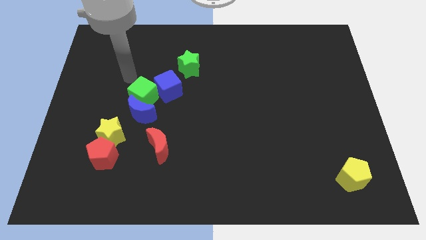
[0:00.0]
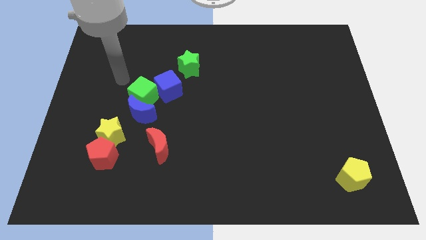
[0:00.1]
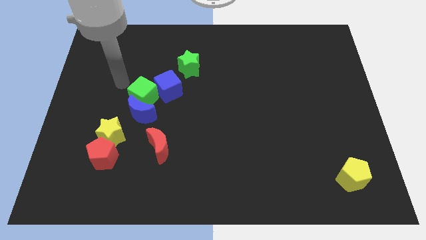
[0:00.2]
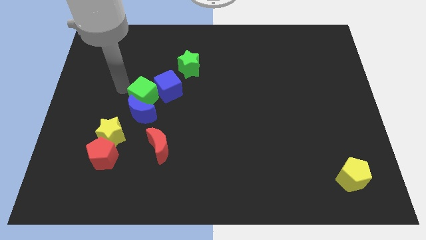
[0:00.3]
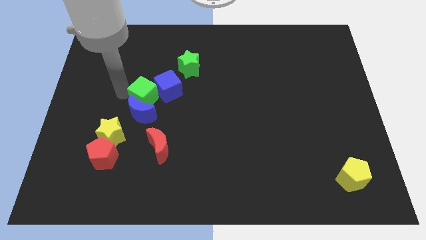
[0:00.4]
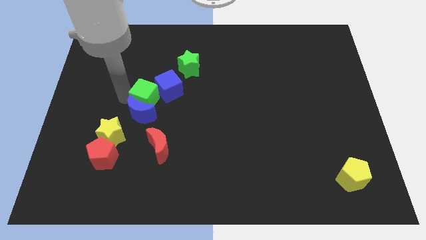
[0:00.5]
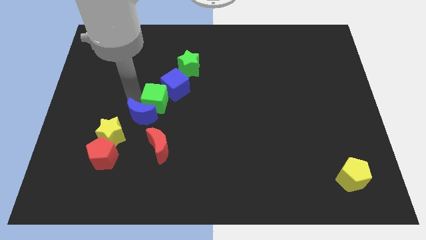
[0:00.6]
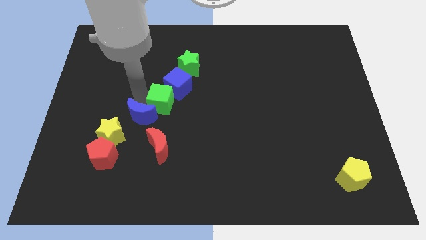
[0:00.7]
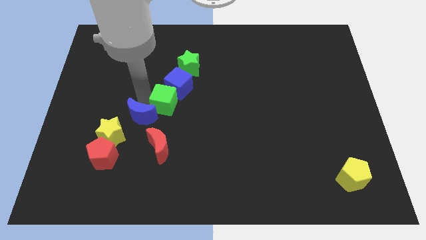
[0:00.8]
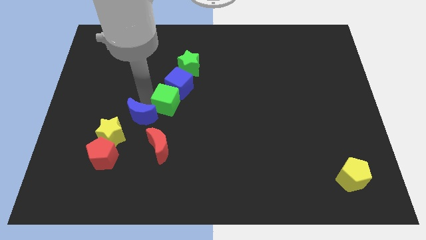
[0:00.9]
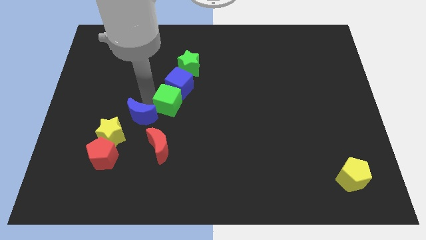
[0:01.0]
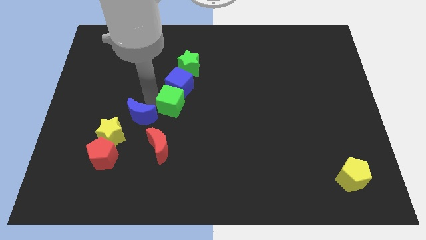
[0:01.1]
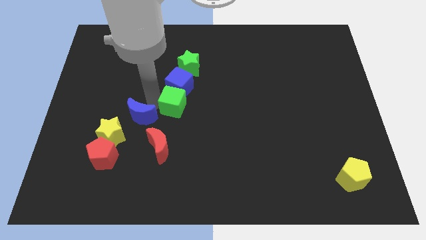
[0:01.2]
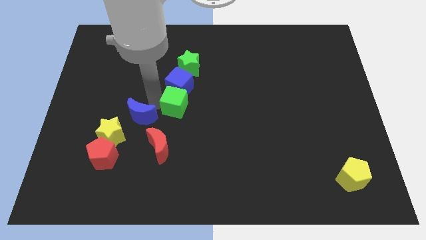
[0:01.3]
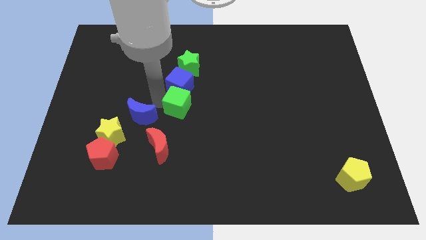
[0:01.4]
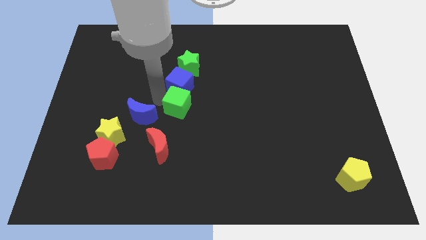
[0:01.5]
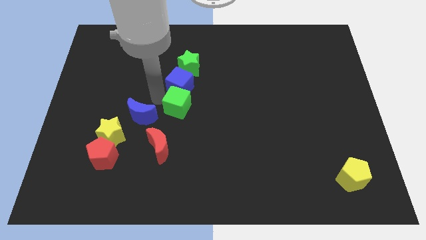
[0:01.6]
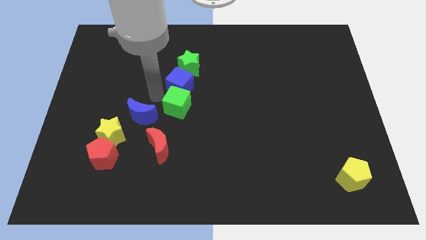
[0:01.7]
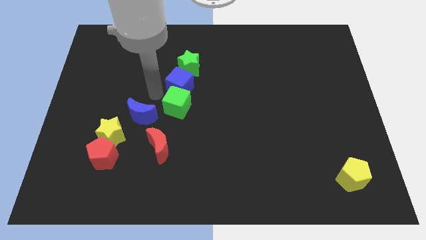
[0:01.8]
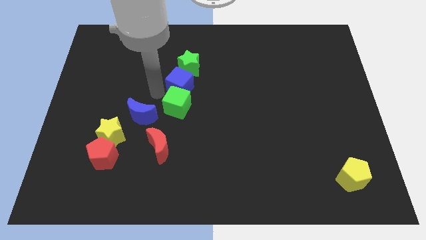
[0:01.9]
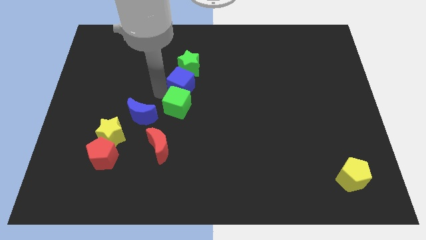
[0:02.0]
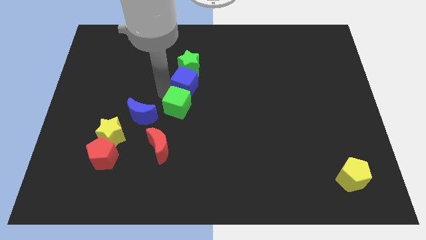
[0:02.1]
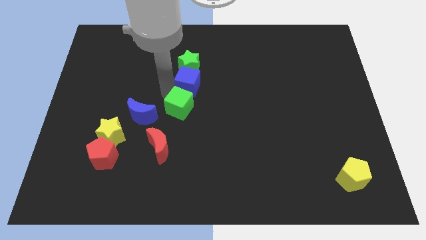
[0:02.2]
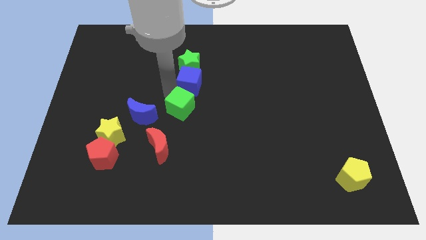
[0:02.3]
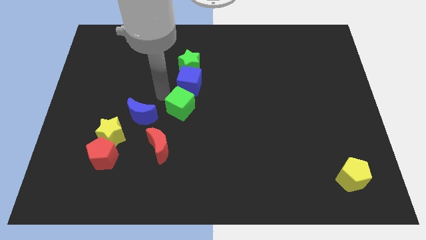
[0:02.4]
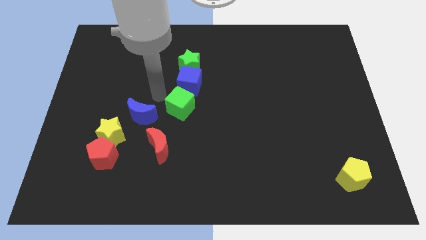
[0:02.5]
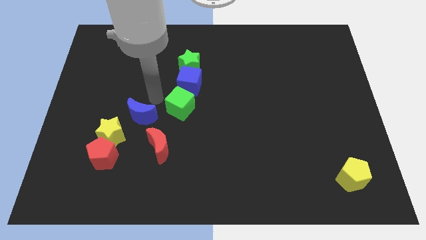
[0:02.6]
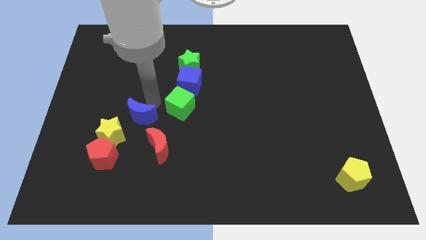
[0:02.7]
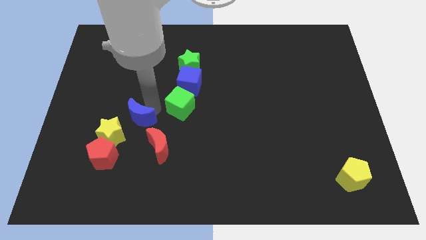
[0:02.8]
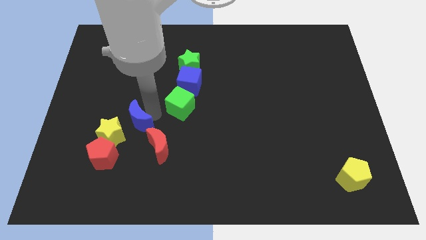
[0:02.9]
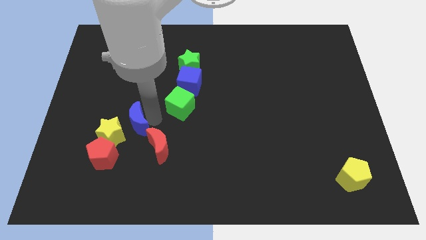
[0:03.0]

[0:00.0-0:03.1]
separate the green cube from the blue crescent

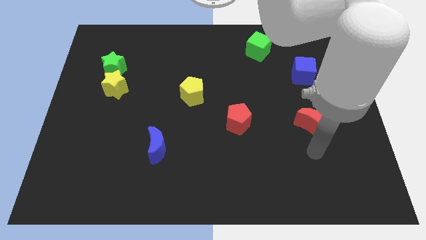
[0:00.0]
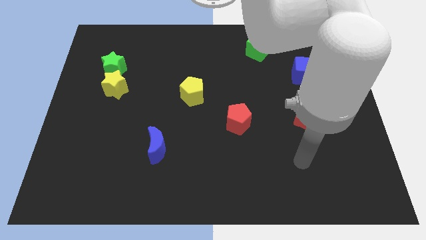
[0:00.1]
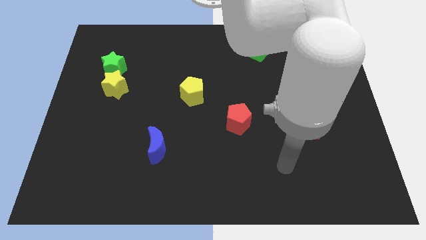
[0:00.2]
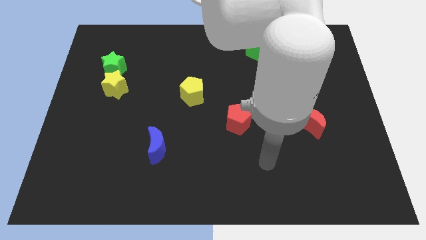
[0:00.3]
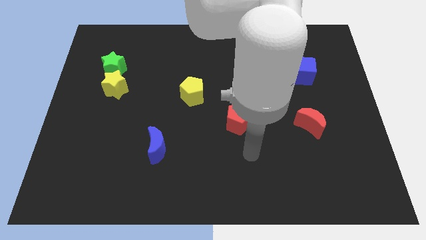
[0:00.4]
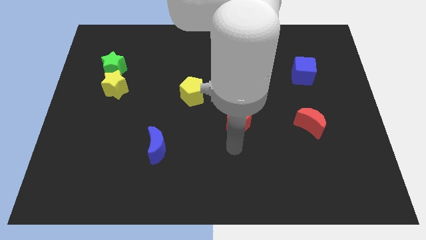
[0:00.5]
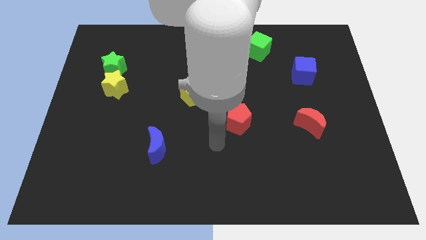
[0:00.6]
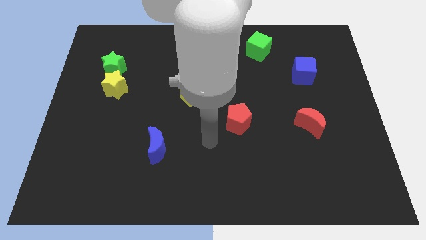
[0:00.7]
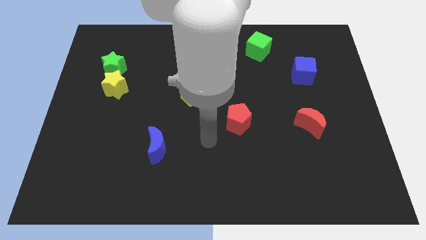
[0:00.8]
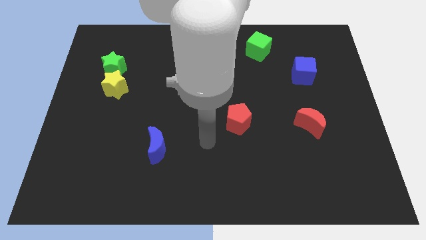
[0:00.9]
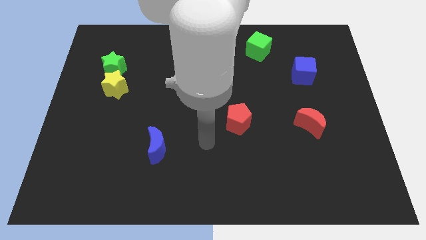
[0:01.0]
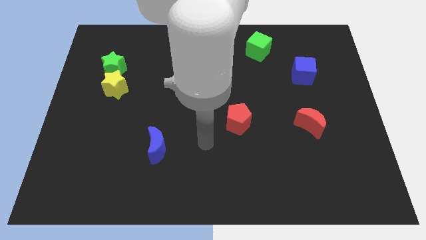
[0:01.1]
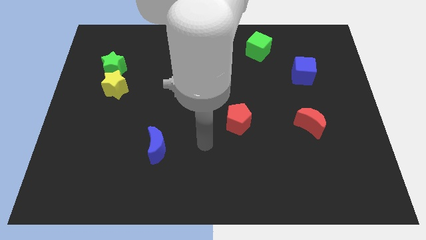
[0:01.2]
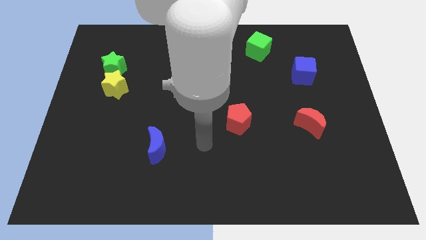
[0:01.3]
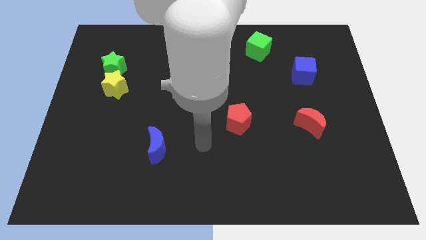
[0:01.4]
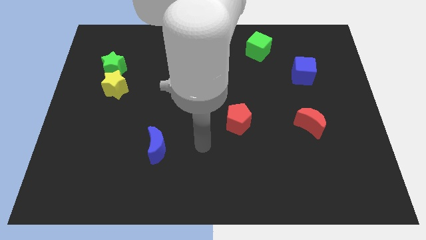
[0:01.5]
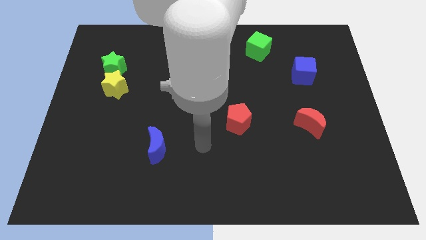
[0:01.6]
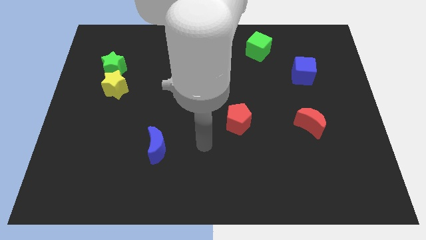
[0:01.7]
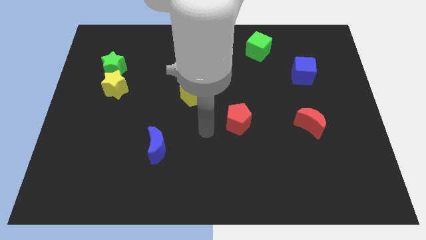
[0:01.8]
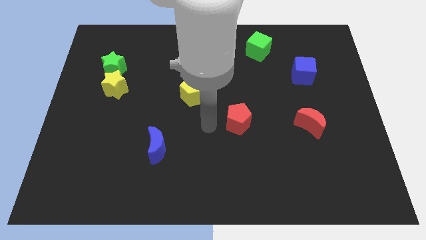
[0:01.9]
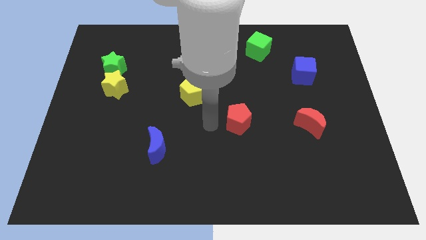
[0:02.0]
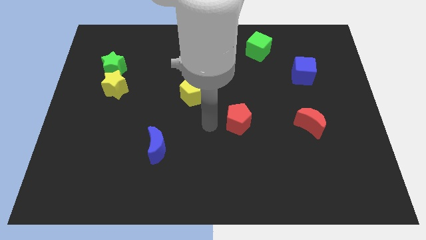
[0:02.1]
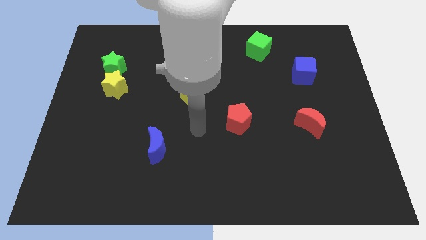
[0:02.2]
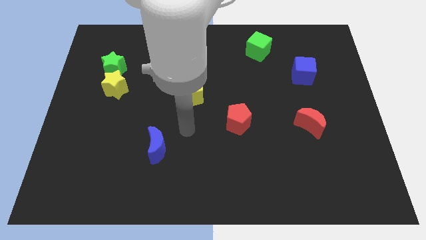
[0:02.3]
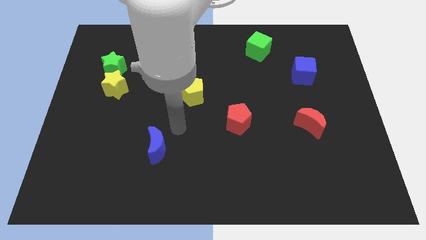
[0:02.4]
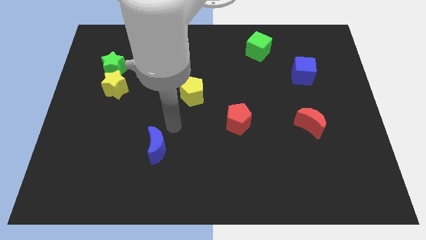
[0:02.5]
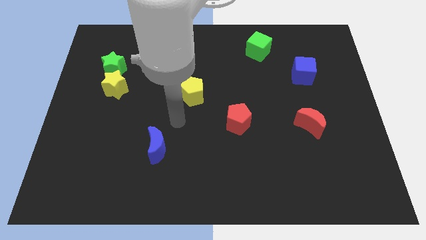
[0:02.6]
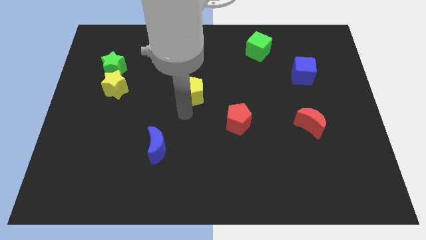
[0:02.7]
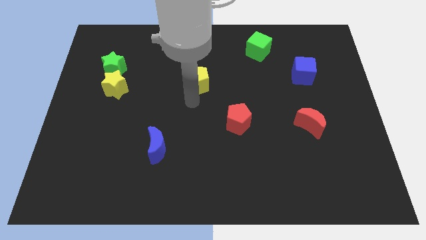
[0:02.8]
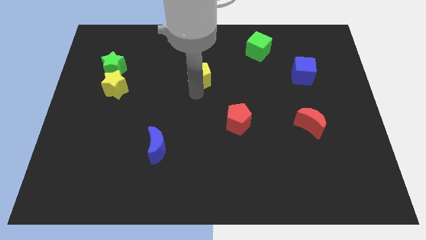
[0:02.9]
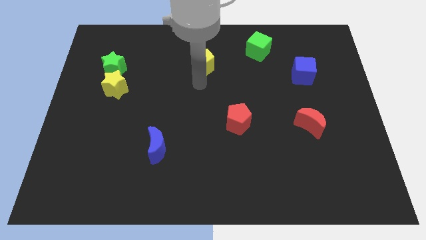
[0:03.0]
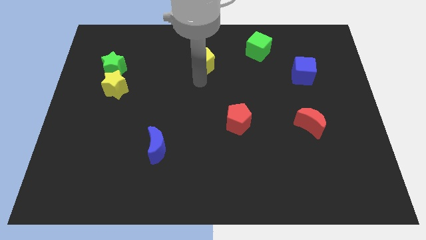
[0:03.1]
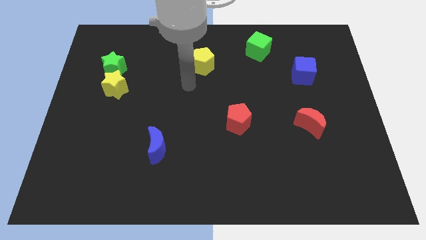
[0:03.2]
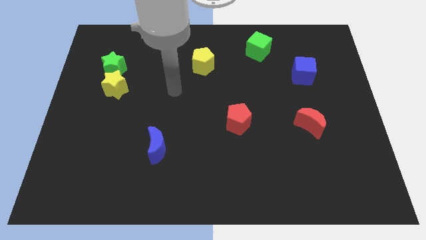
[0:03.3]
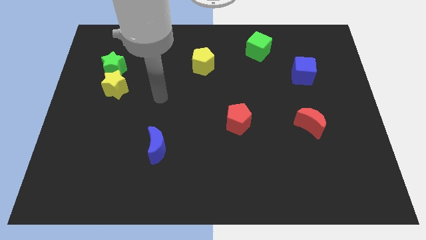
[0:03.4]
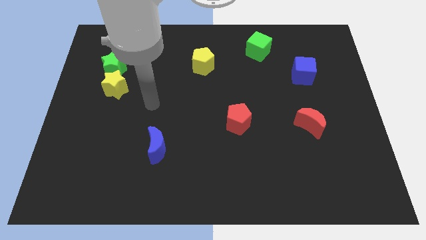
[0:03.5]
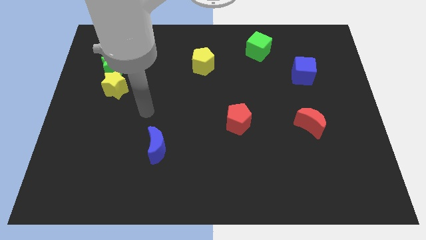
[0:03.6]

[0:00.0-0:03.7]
place the yellow pentagon to the left of the blue cube

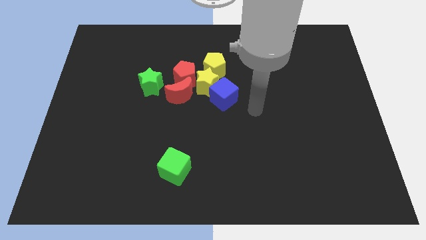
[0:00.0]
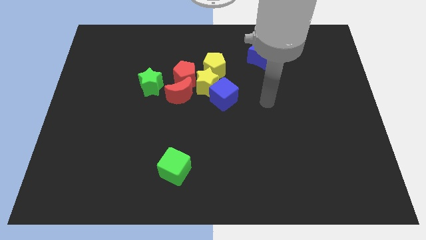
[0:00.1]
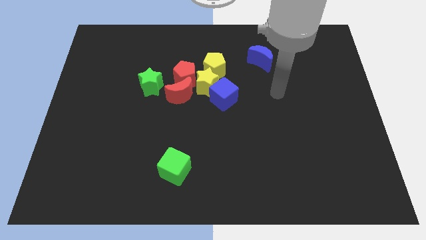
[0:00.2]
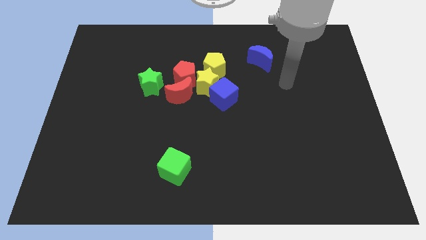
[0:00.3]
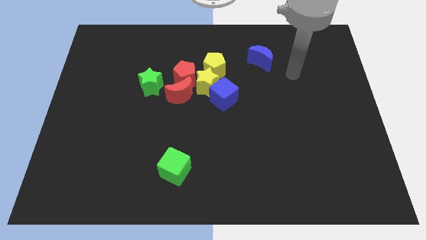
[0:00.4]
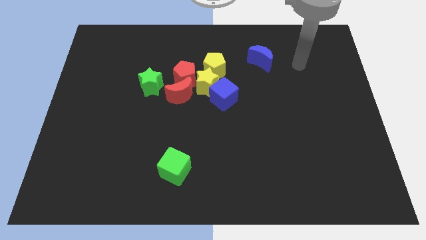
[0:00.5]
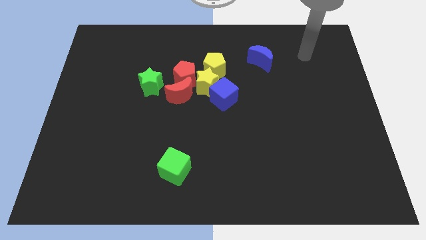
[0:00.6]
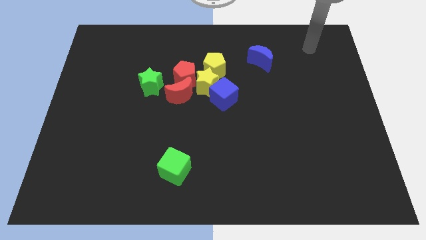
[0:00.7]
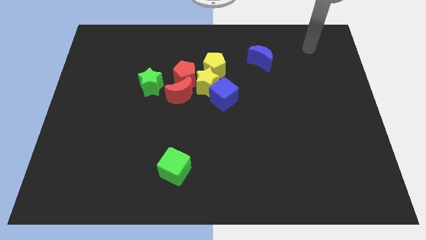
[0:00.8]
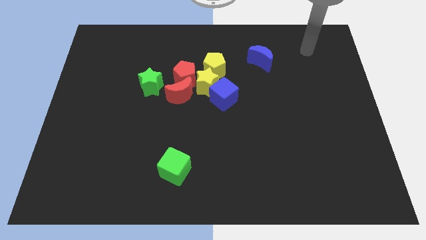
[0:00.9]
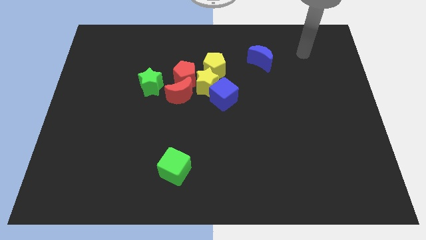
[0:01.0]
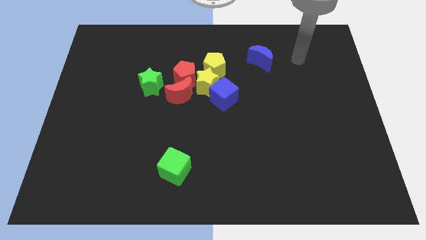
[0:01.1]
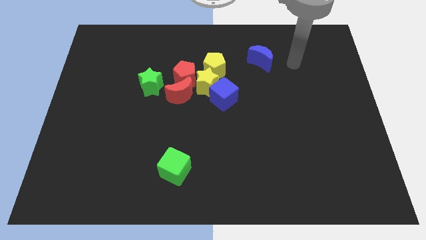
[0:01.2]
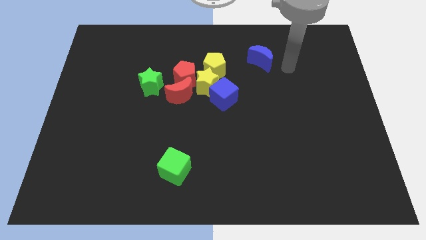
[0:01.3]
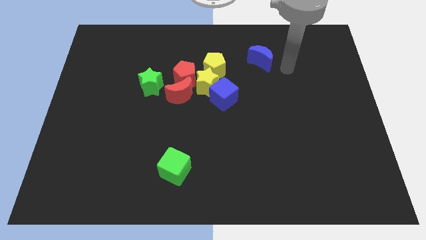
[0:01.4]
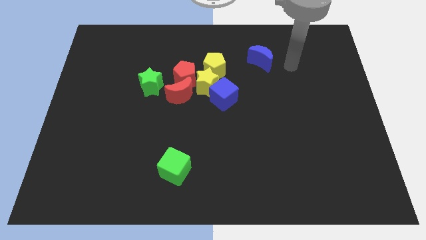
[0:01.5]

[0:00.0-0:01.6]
point your arm at the right of the blue crescent

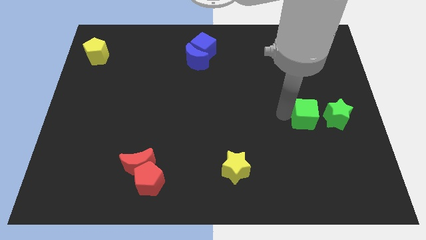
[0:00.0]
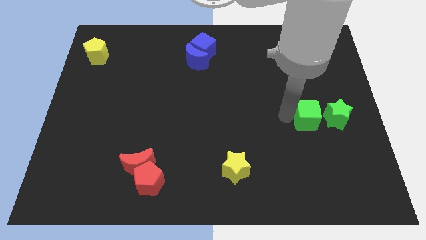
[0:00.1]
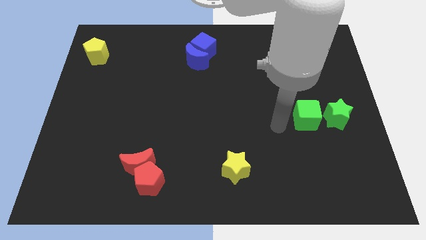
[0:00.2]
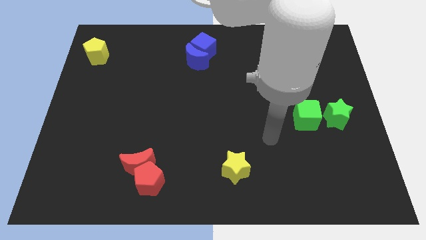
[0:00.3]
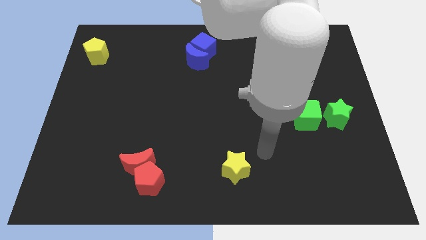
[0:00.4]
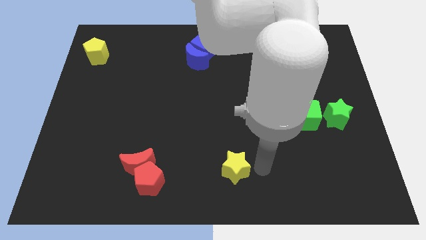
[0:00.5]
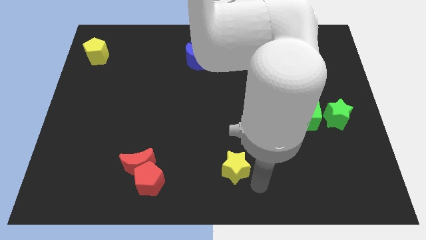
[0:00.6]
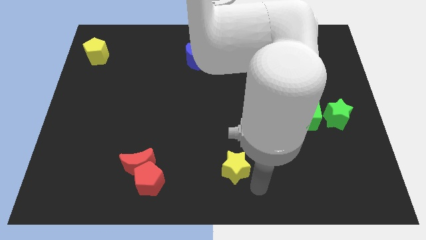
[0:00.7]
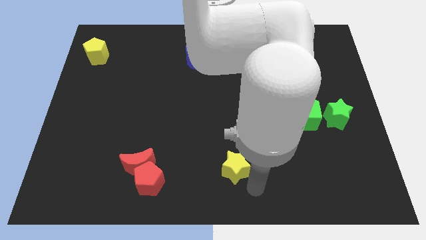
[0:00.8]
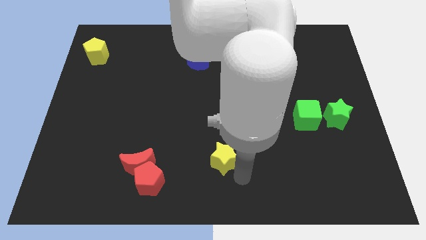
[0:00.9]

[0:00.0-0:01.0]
move away from the green cube
